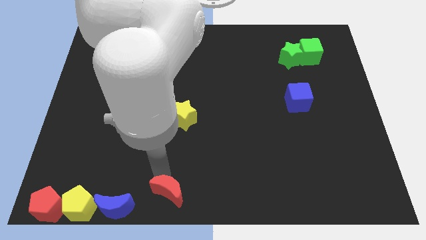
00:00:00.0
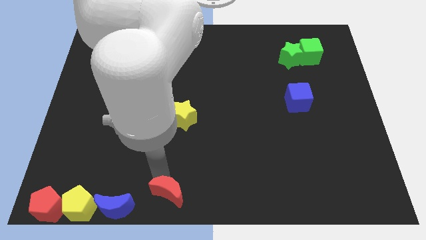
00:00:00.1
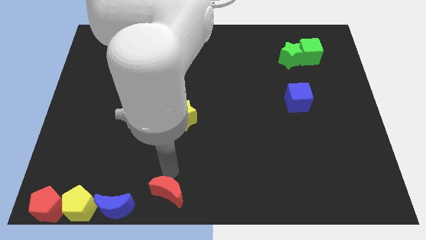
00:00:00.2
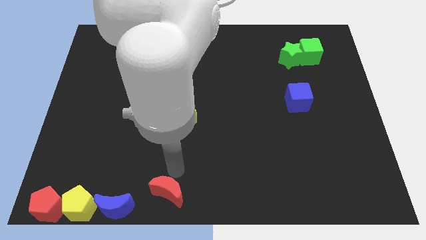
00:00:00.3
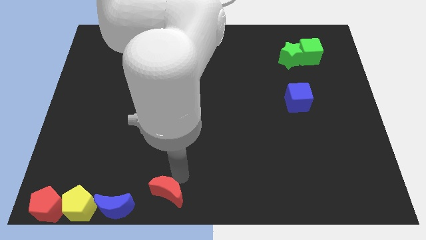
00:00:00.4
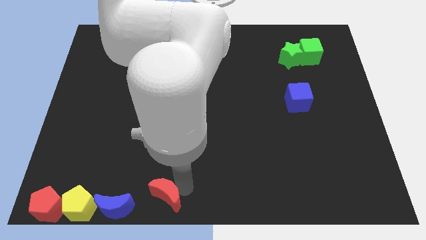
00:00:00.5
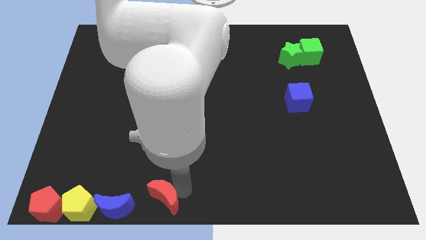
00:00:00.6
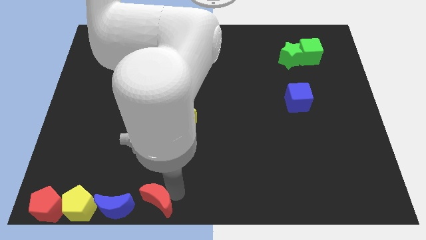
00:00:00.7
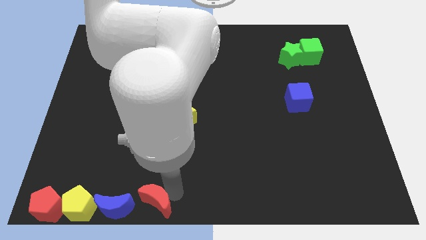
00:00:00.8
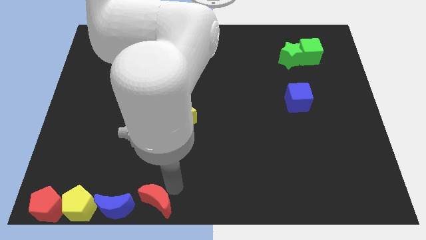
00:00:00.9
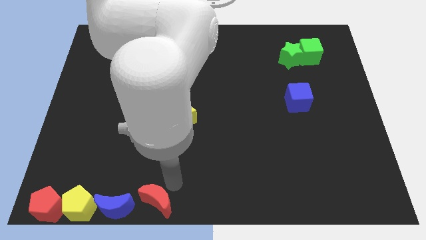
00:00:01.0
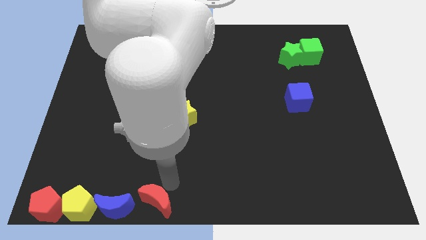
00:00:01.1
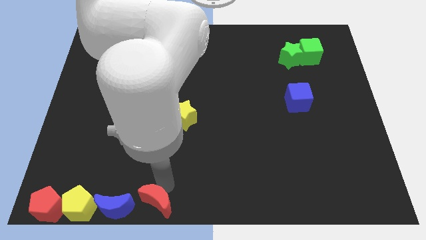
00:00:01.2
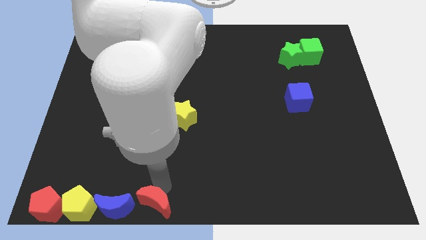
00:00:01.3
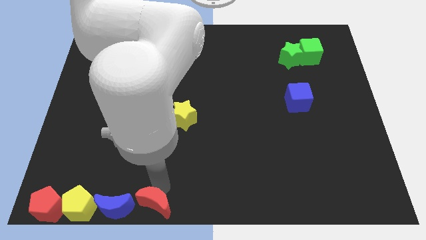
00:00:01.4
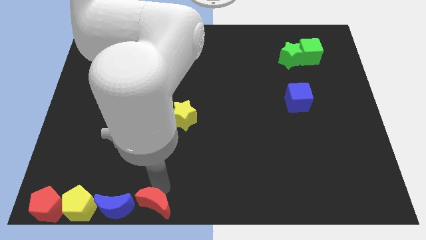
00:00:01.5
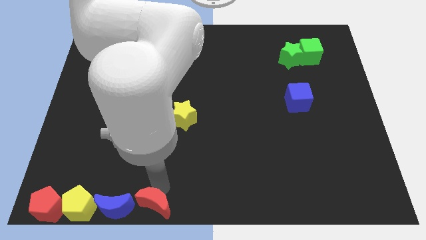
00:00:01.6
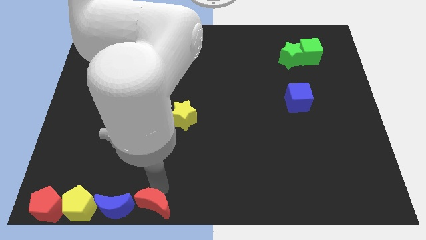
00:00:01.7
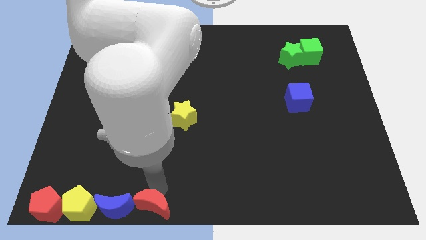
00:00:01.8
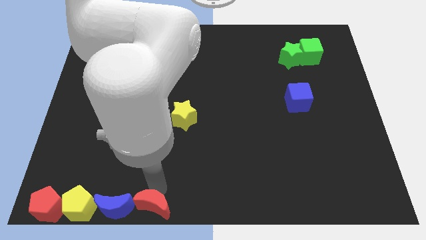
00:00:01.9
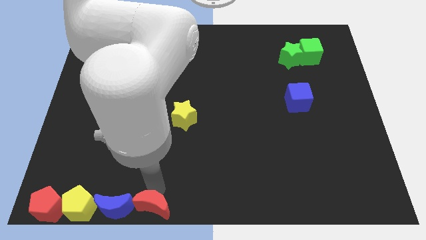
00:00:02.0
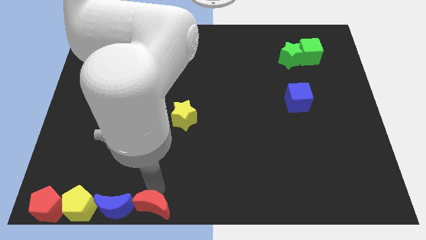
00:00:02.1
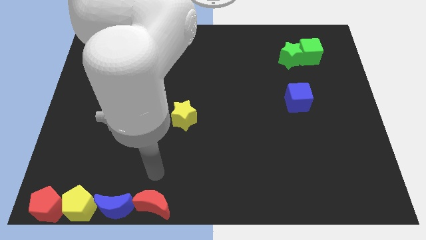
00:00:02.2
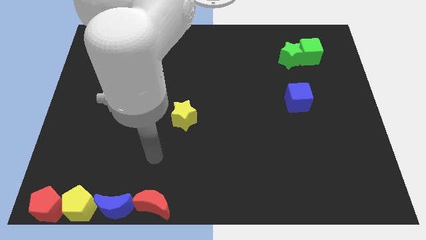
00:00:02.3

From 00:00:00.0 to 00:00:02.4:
move the red crescent right beside the blue crescent

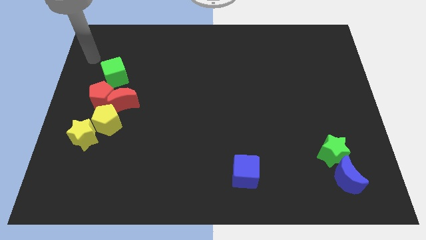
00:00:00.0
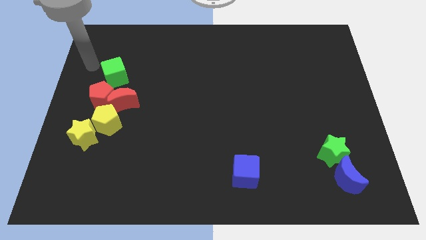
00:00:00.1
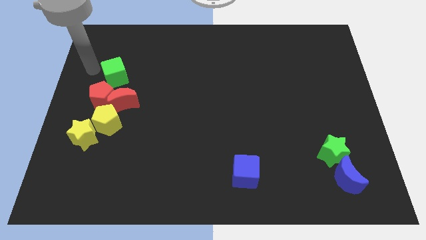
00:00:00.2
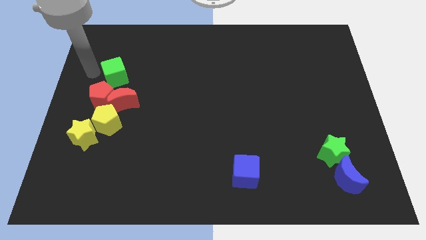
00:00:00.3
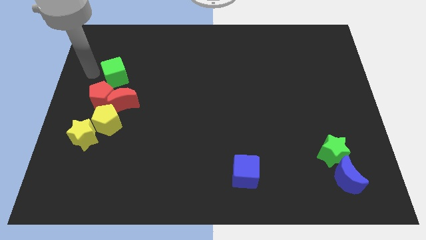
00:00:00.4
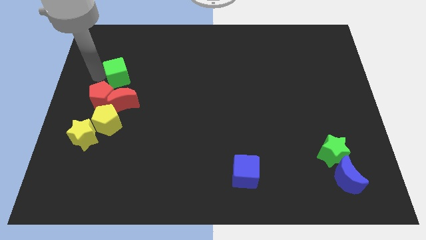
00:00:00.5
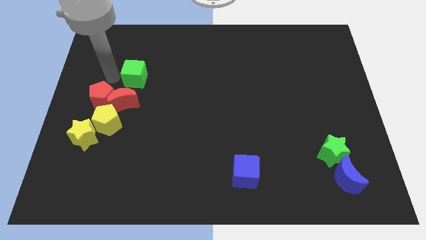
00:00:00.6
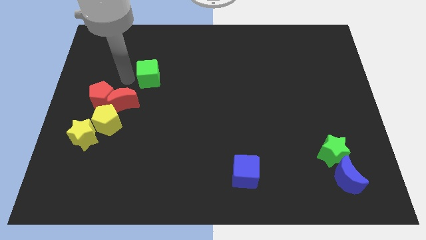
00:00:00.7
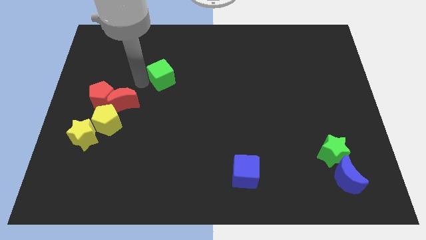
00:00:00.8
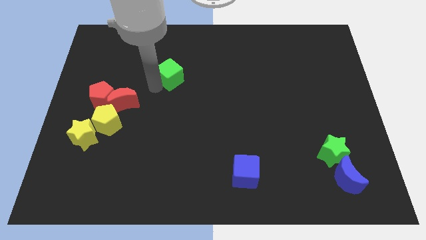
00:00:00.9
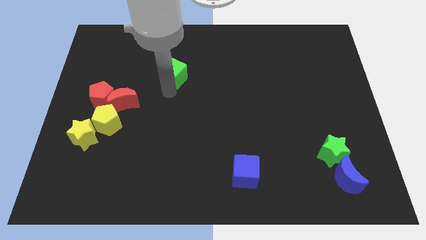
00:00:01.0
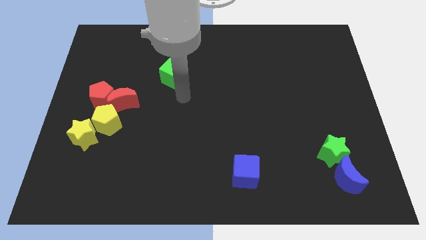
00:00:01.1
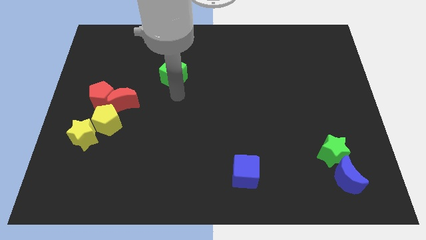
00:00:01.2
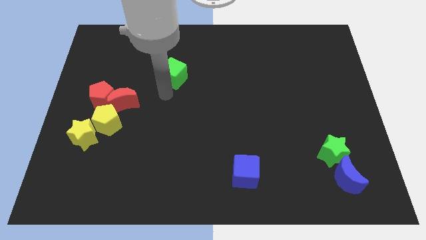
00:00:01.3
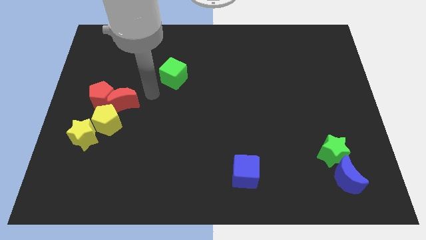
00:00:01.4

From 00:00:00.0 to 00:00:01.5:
move the green cube towards the right

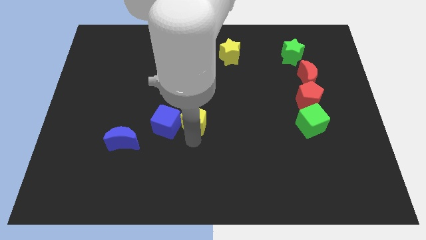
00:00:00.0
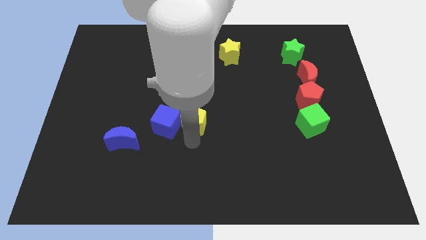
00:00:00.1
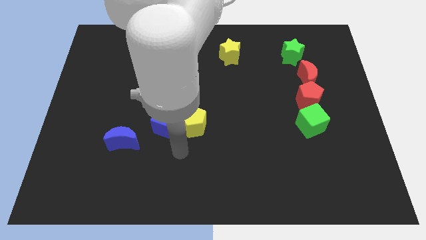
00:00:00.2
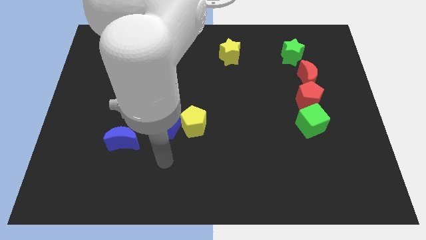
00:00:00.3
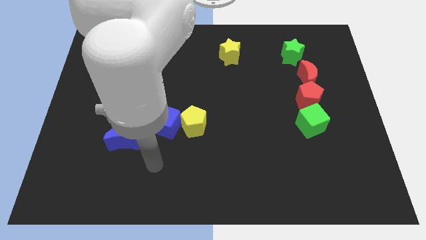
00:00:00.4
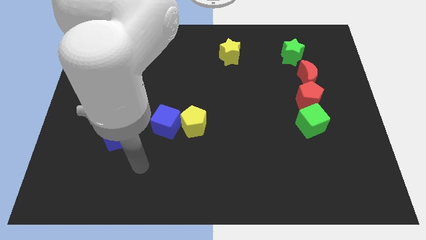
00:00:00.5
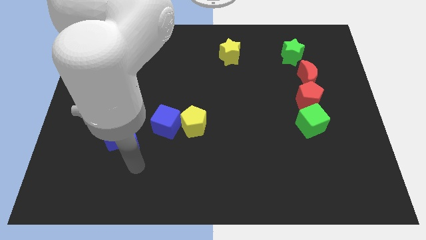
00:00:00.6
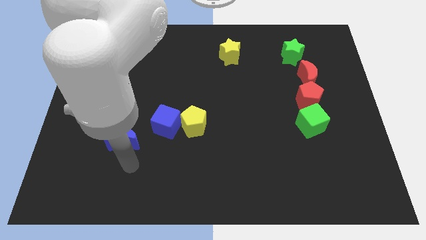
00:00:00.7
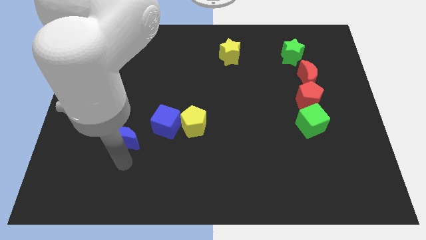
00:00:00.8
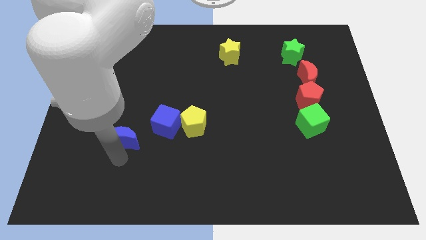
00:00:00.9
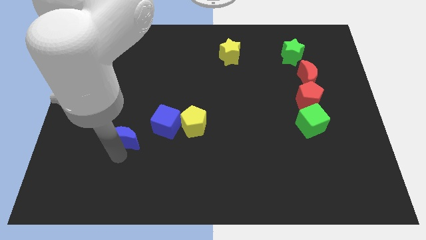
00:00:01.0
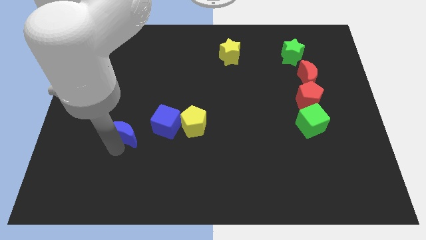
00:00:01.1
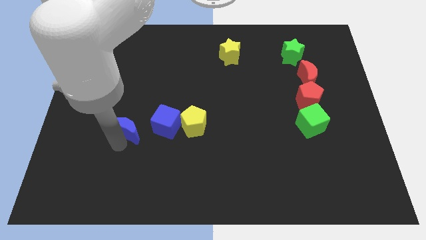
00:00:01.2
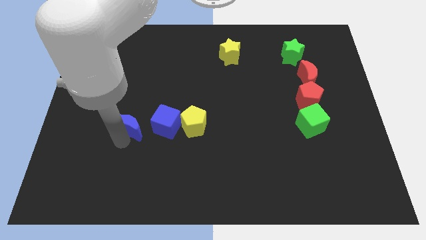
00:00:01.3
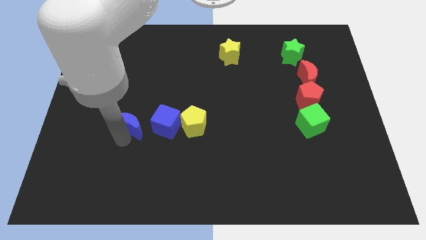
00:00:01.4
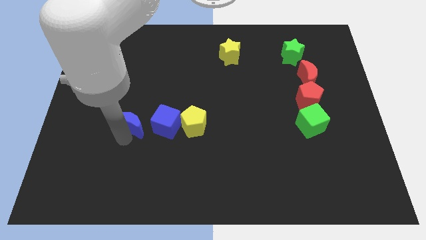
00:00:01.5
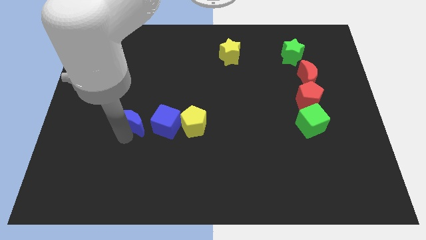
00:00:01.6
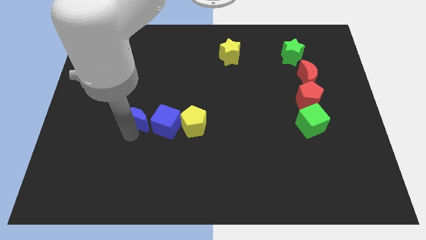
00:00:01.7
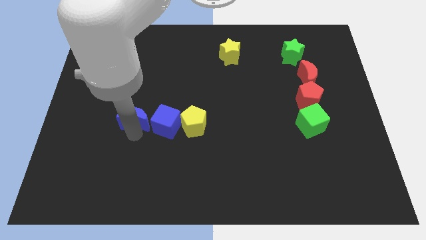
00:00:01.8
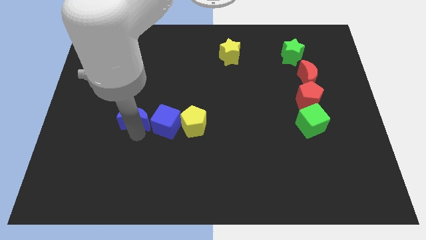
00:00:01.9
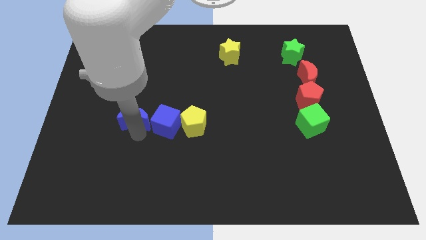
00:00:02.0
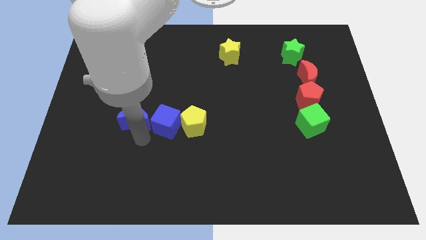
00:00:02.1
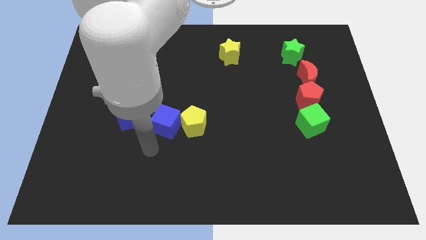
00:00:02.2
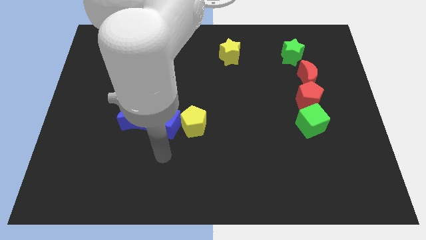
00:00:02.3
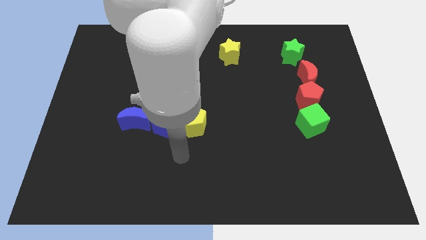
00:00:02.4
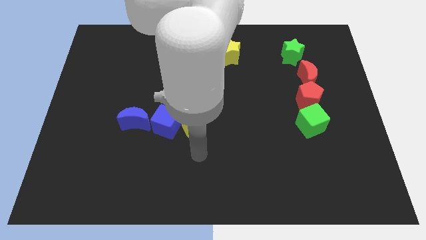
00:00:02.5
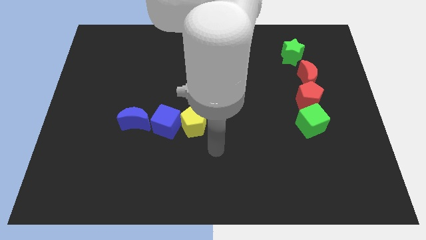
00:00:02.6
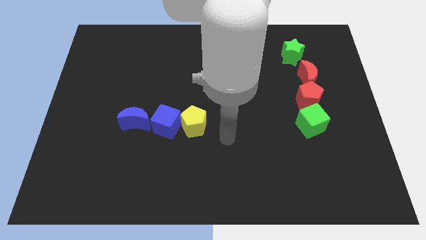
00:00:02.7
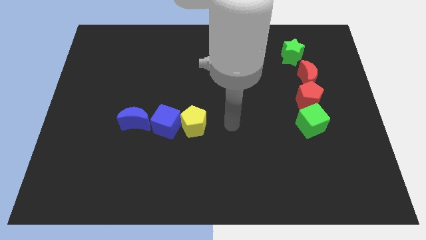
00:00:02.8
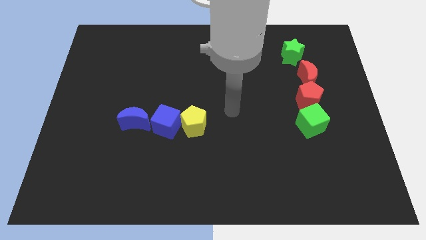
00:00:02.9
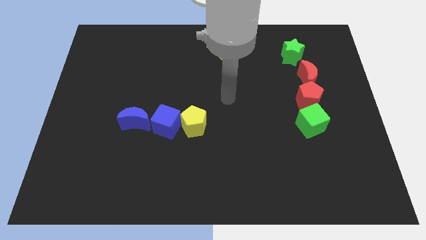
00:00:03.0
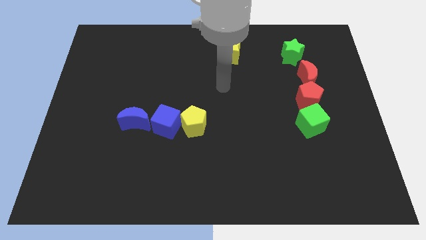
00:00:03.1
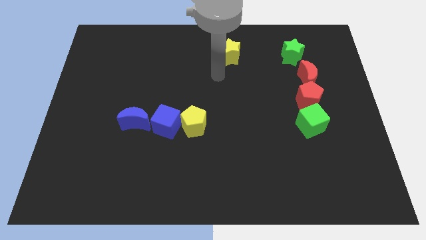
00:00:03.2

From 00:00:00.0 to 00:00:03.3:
push the blue moon upward

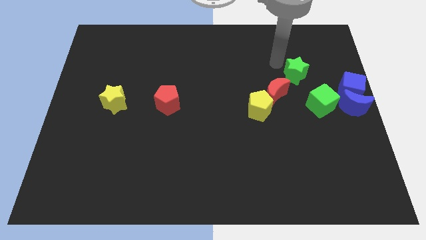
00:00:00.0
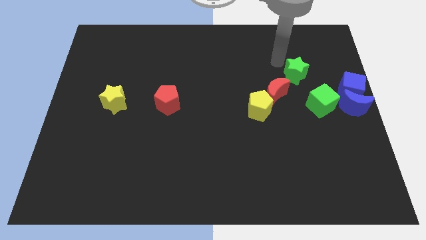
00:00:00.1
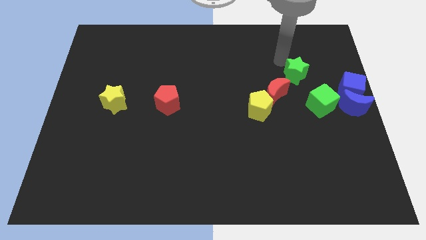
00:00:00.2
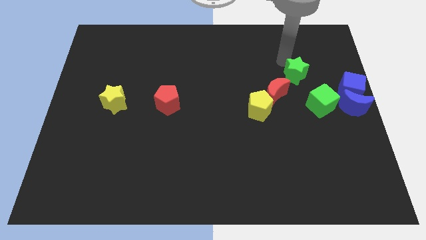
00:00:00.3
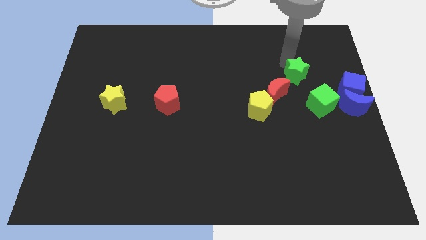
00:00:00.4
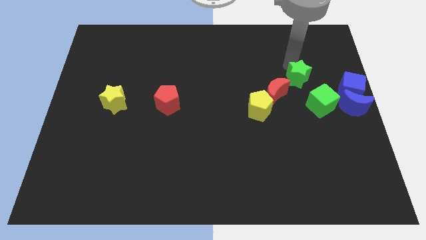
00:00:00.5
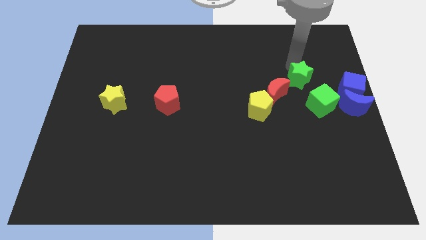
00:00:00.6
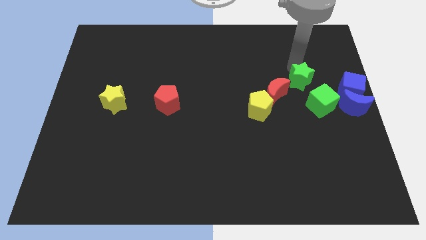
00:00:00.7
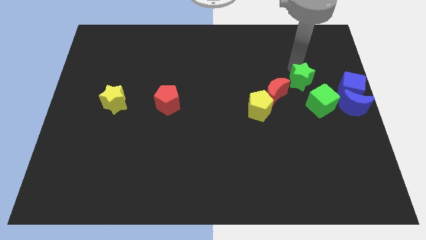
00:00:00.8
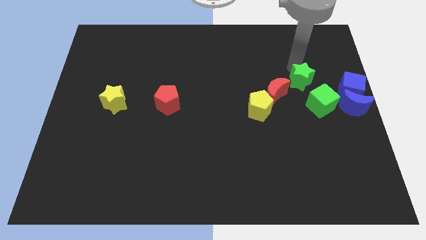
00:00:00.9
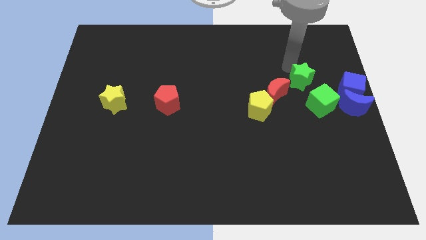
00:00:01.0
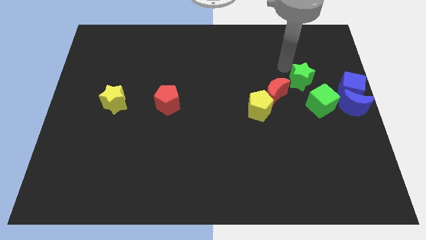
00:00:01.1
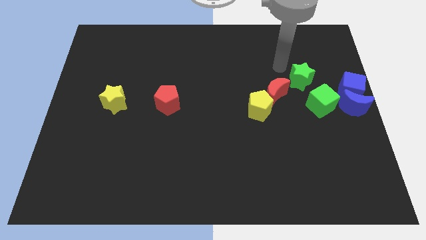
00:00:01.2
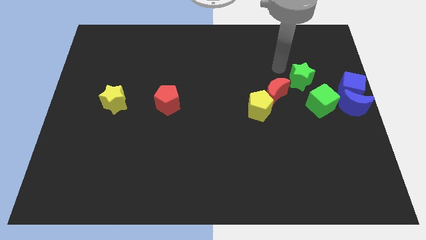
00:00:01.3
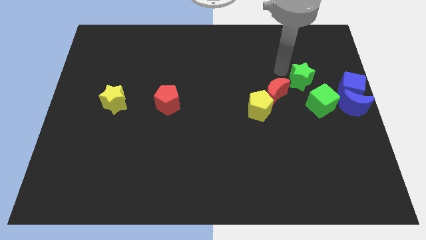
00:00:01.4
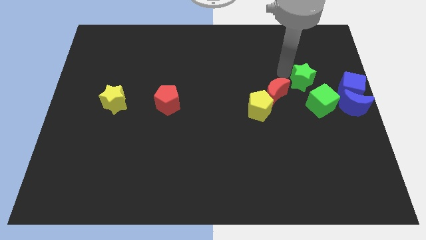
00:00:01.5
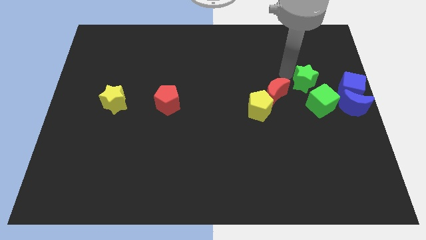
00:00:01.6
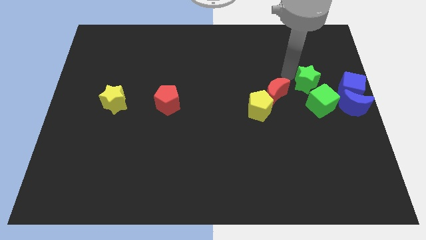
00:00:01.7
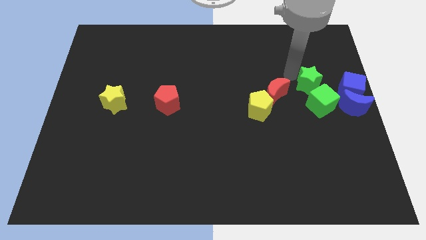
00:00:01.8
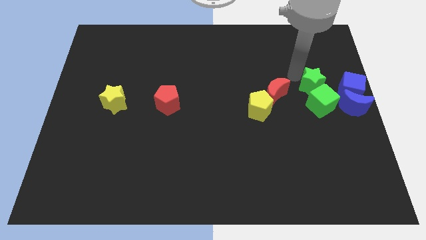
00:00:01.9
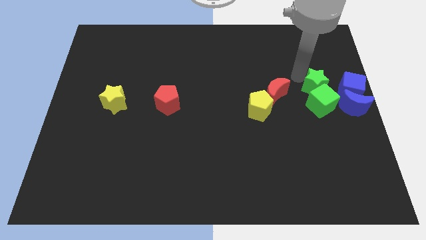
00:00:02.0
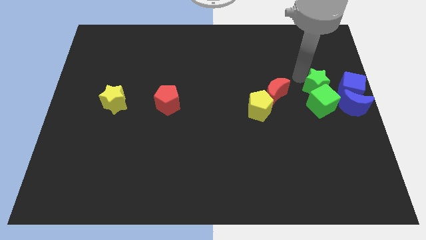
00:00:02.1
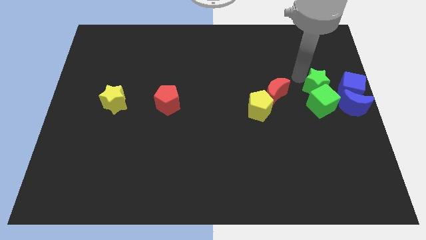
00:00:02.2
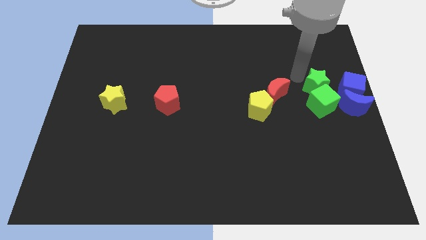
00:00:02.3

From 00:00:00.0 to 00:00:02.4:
push the green star into the green cube
